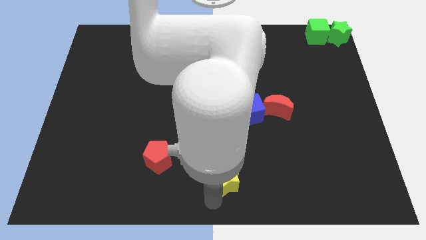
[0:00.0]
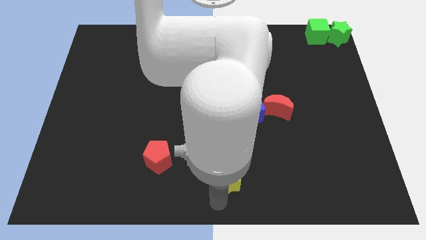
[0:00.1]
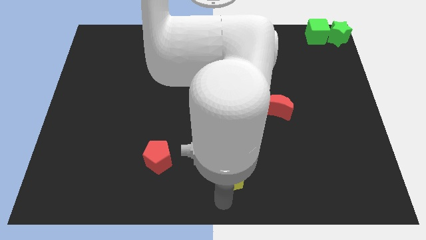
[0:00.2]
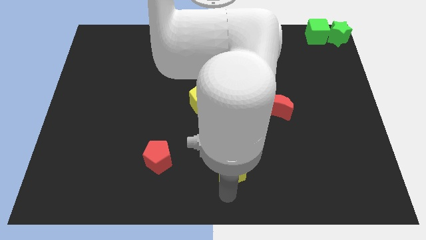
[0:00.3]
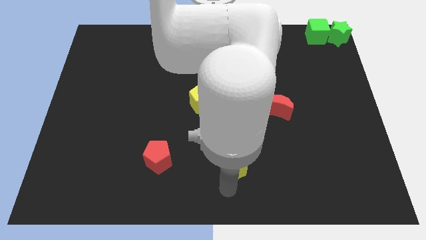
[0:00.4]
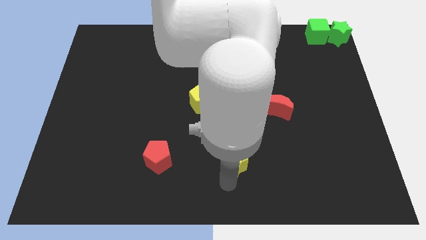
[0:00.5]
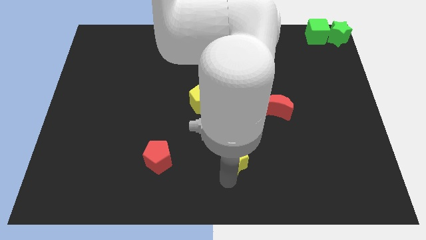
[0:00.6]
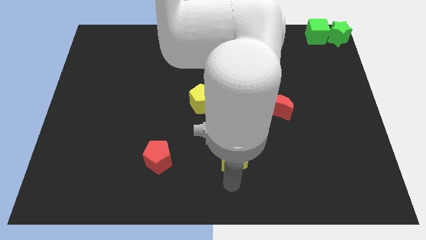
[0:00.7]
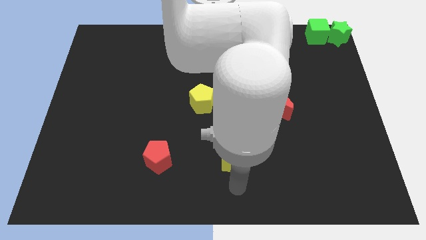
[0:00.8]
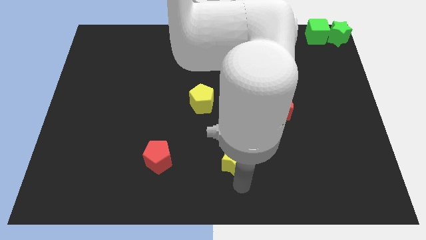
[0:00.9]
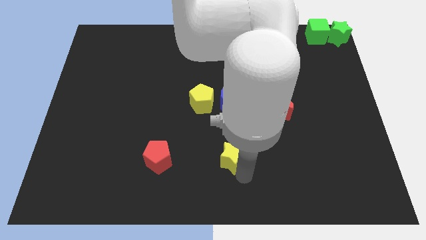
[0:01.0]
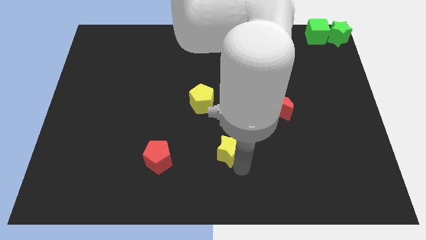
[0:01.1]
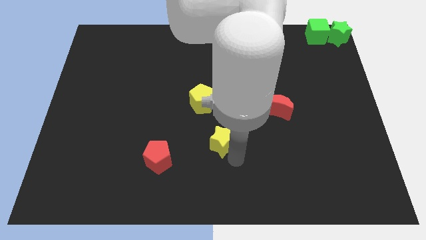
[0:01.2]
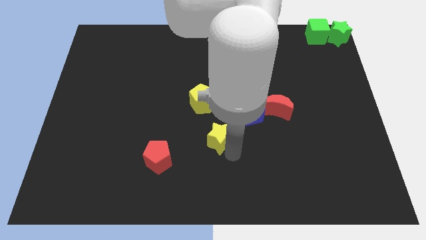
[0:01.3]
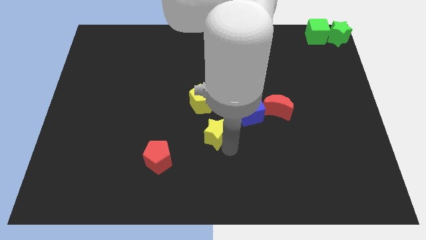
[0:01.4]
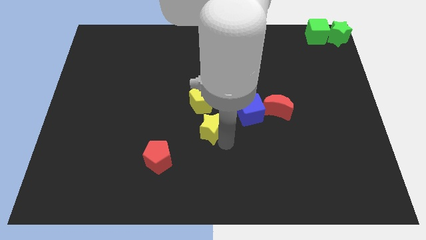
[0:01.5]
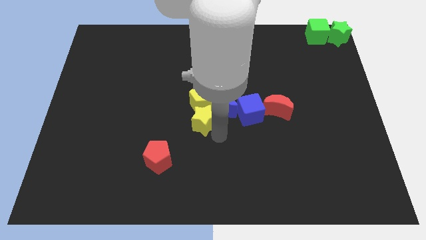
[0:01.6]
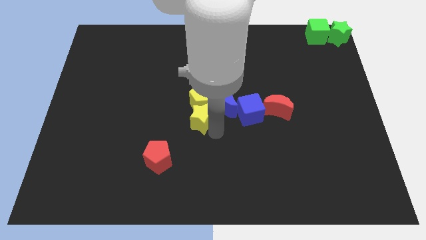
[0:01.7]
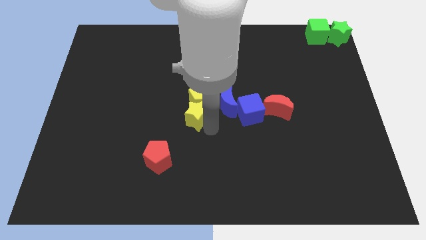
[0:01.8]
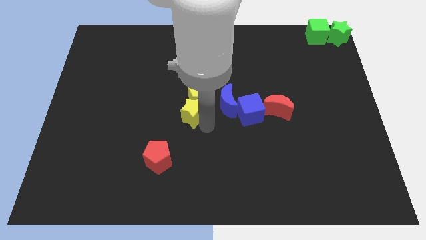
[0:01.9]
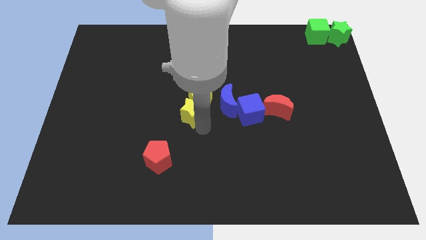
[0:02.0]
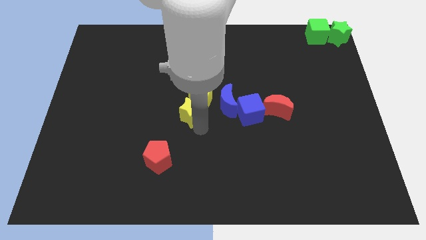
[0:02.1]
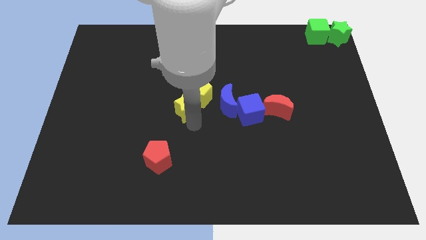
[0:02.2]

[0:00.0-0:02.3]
push the yellow star into yellow pentagon

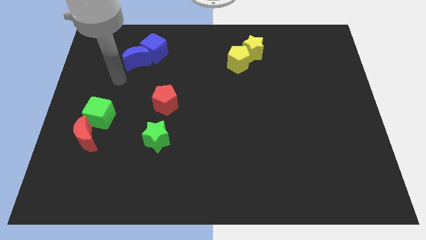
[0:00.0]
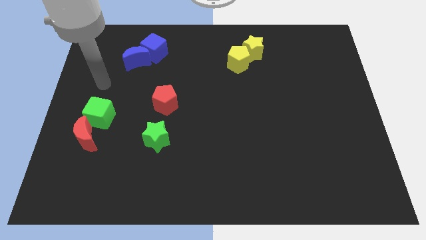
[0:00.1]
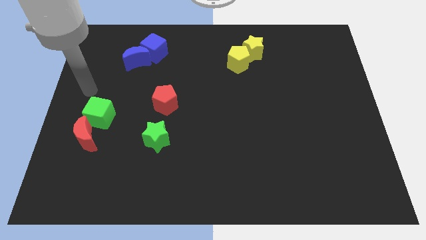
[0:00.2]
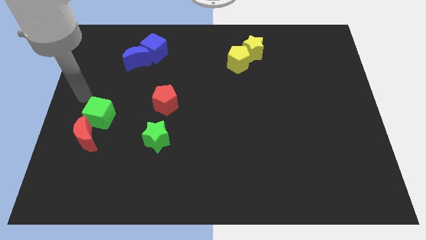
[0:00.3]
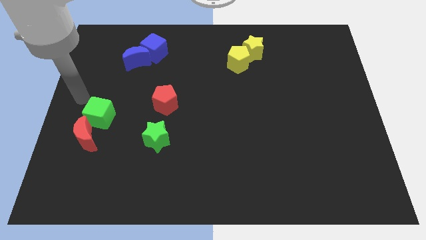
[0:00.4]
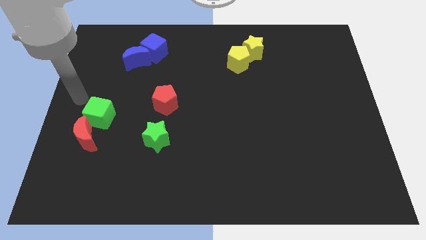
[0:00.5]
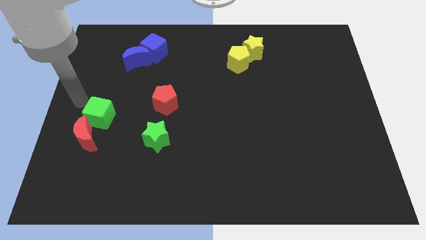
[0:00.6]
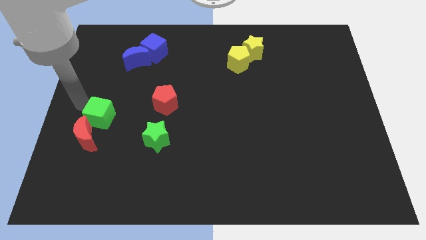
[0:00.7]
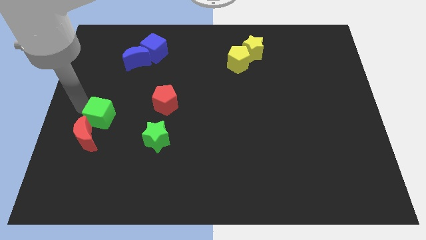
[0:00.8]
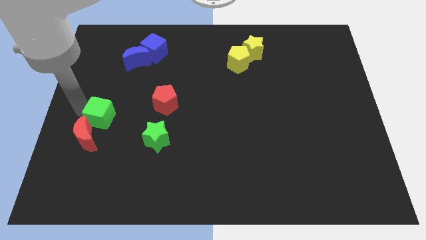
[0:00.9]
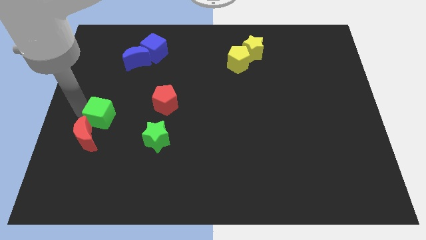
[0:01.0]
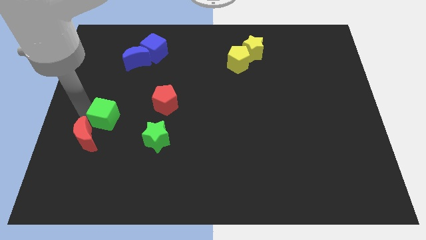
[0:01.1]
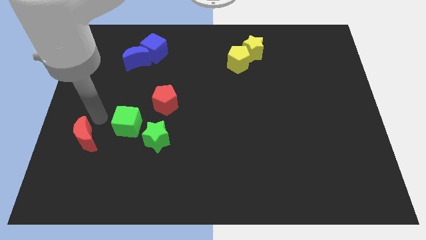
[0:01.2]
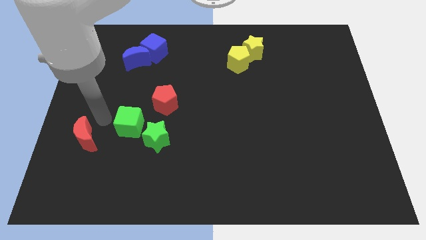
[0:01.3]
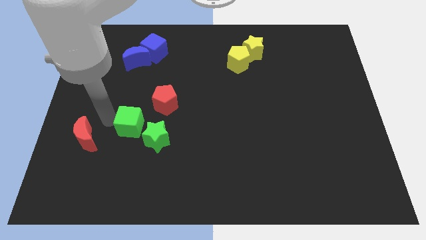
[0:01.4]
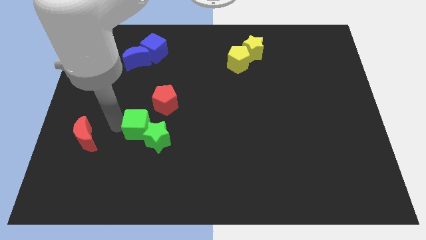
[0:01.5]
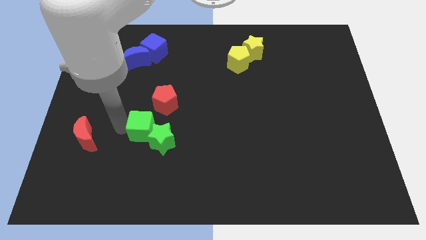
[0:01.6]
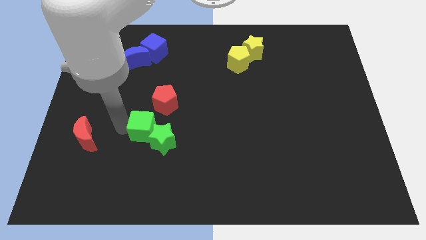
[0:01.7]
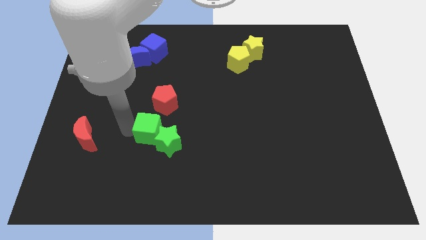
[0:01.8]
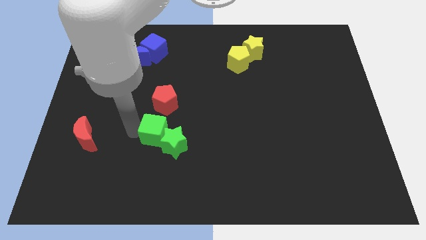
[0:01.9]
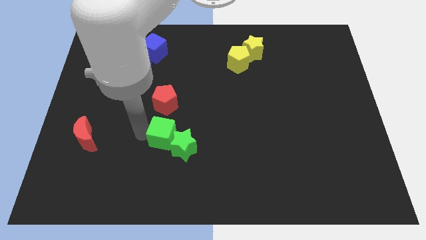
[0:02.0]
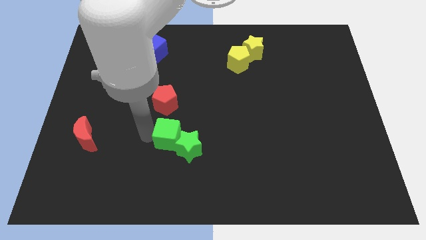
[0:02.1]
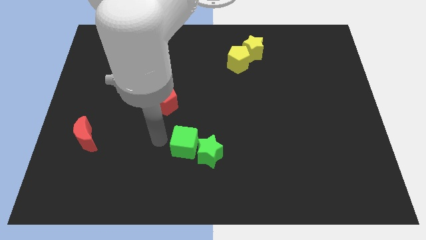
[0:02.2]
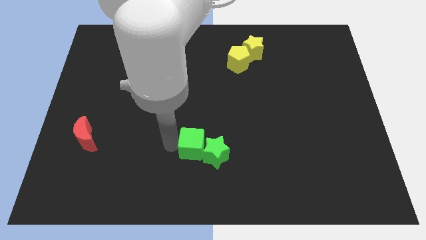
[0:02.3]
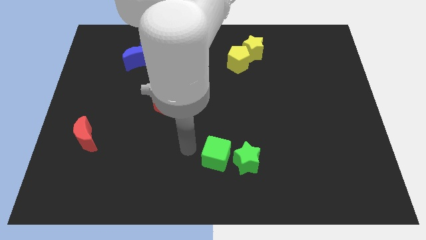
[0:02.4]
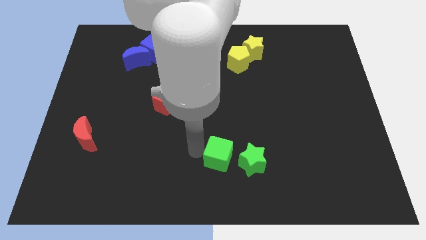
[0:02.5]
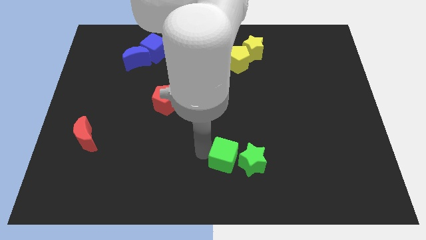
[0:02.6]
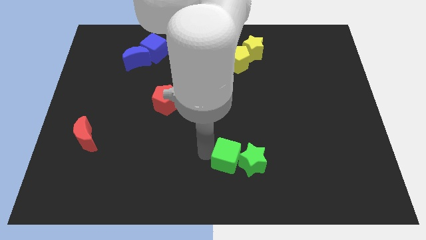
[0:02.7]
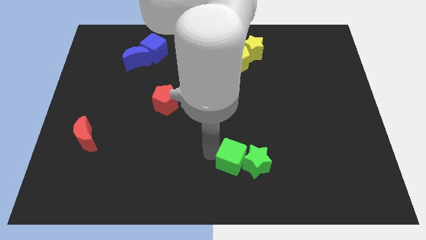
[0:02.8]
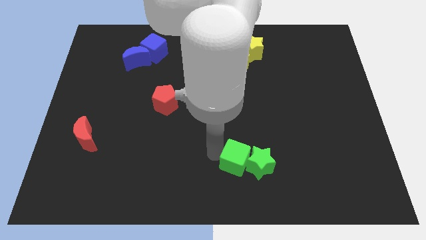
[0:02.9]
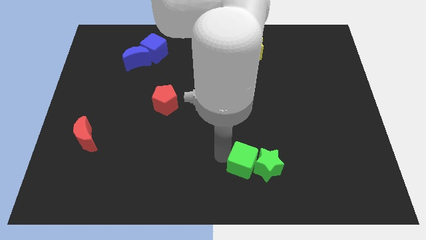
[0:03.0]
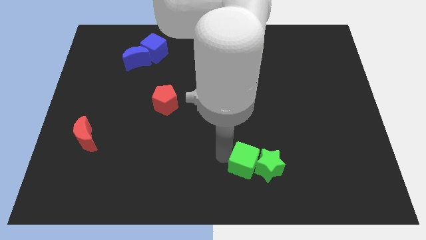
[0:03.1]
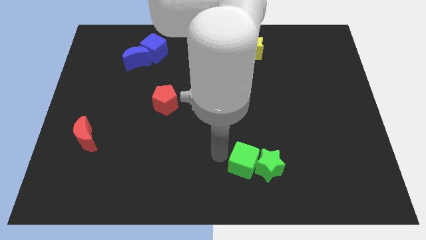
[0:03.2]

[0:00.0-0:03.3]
push the green blocks towards the bottom side of the table

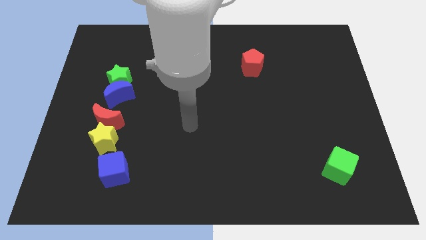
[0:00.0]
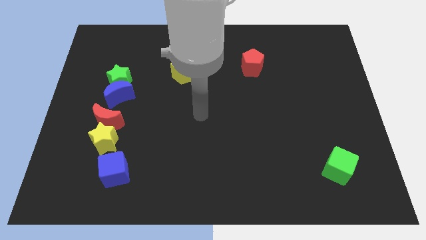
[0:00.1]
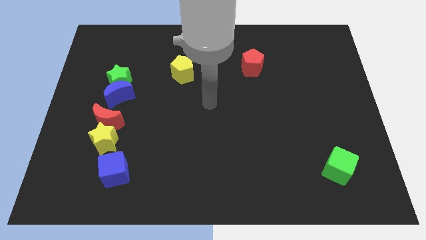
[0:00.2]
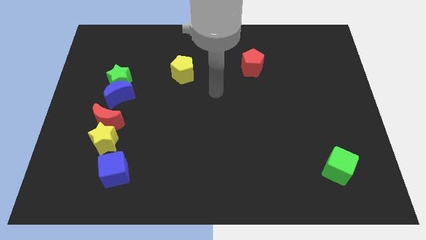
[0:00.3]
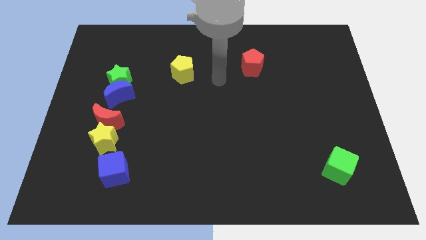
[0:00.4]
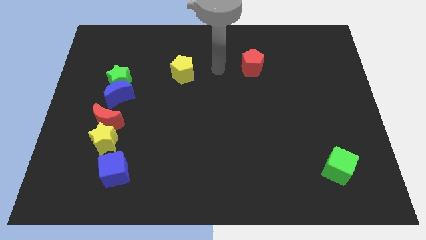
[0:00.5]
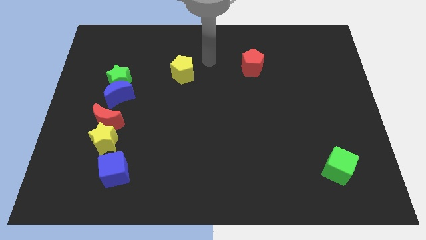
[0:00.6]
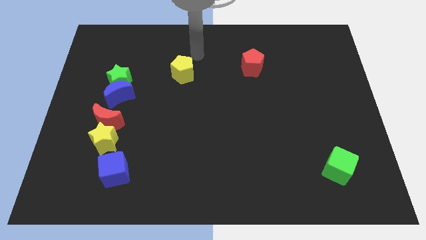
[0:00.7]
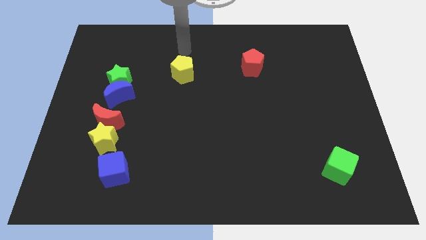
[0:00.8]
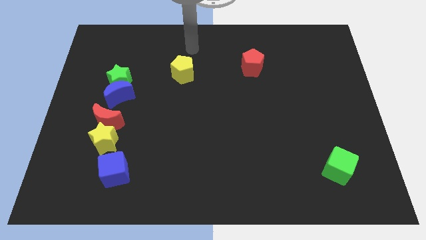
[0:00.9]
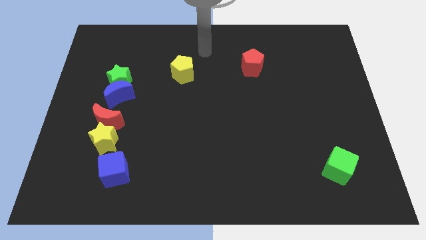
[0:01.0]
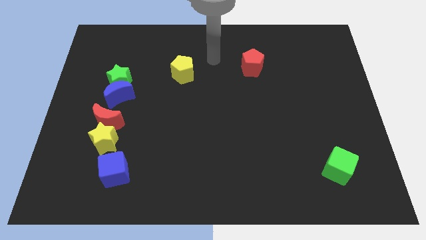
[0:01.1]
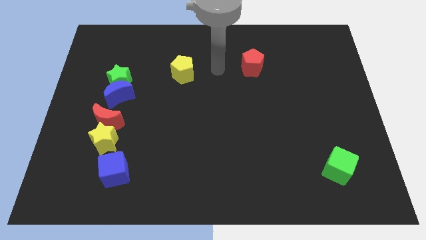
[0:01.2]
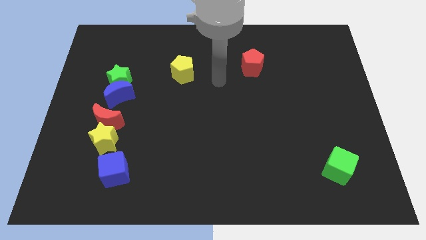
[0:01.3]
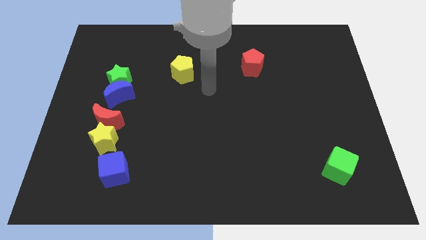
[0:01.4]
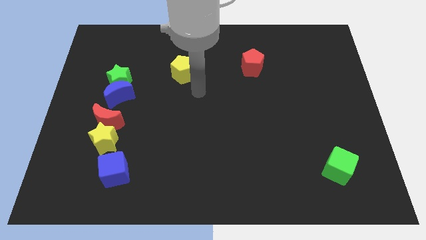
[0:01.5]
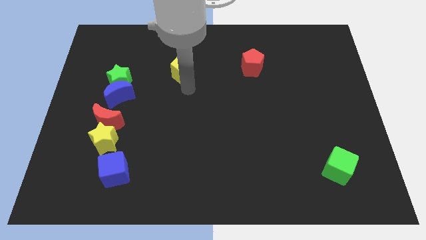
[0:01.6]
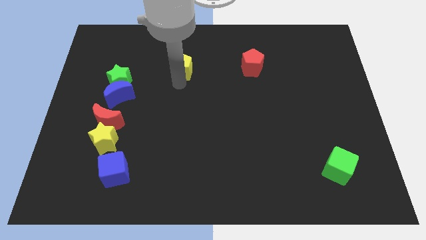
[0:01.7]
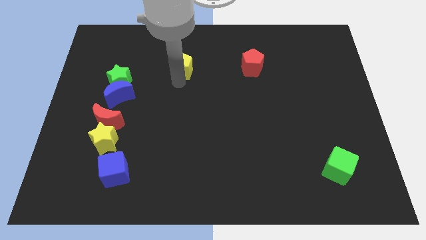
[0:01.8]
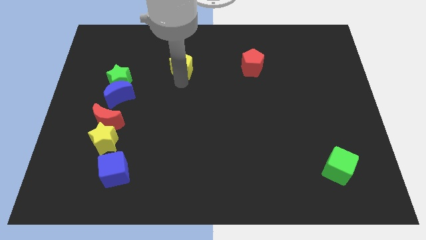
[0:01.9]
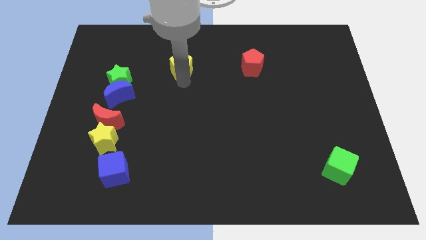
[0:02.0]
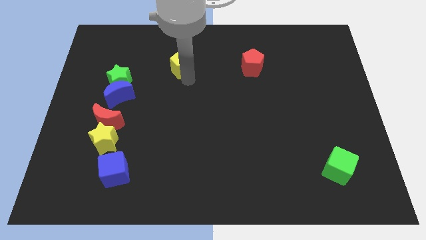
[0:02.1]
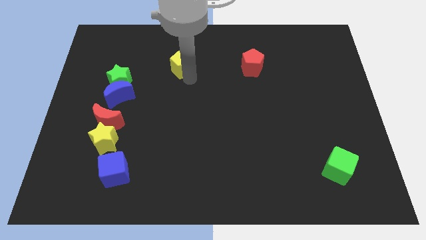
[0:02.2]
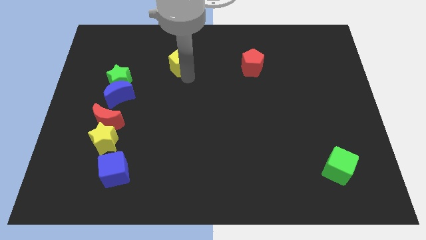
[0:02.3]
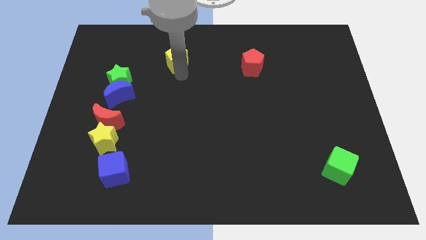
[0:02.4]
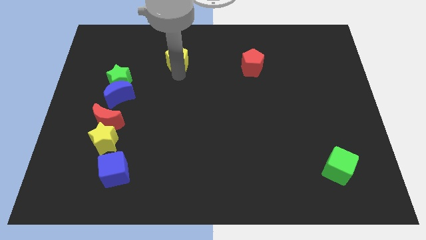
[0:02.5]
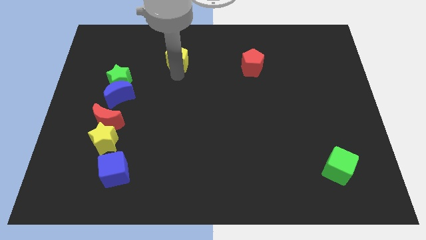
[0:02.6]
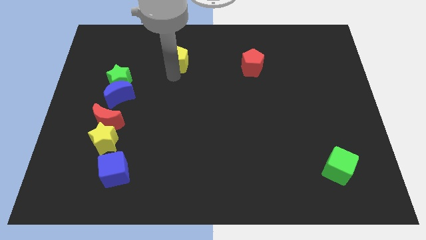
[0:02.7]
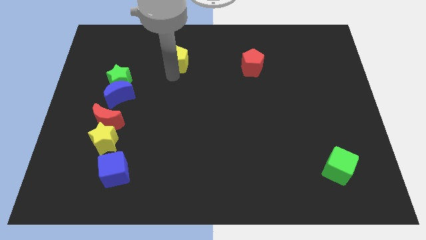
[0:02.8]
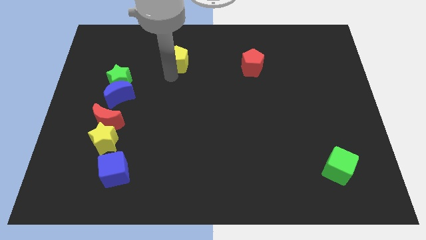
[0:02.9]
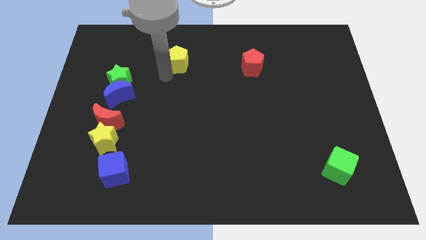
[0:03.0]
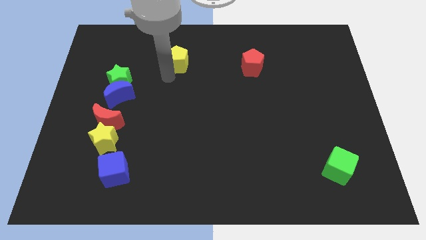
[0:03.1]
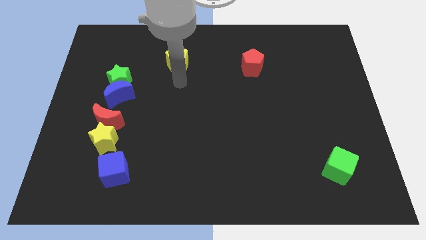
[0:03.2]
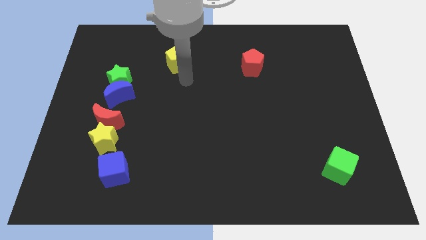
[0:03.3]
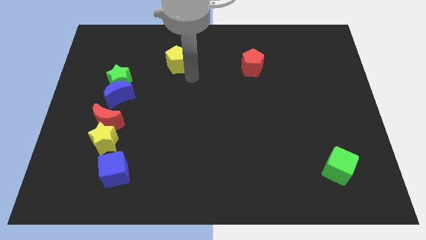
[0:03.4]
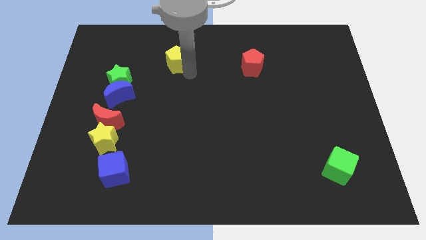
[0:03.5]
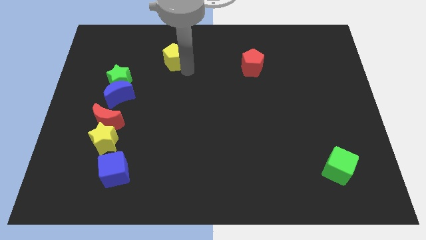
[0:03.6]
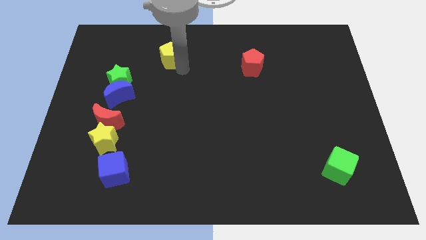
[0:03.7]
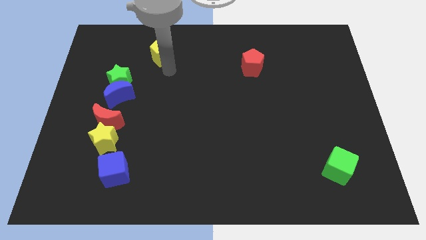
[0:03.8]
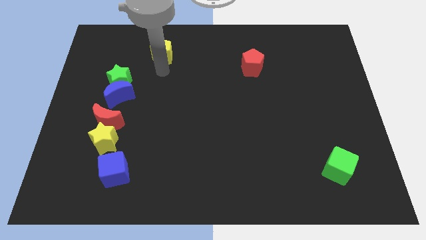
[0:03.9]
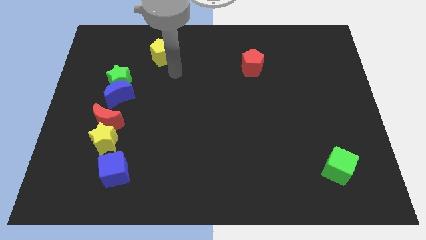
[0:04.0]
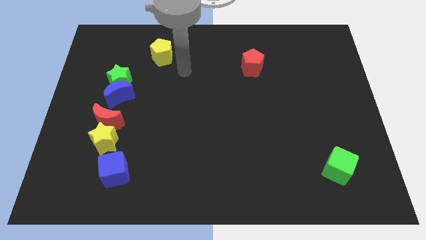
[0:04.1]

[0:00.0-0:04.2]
push the yellow pentagon up slightly
